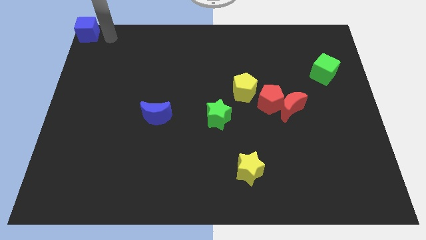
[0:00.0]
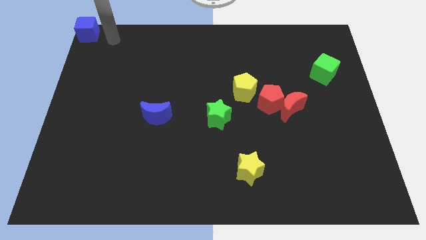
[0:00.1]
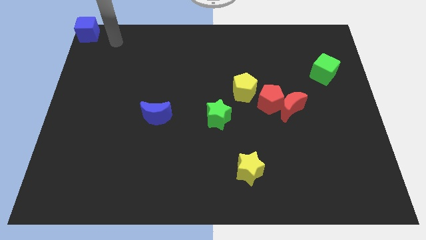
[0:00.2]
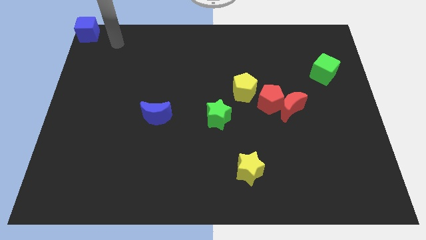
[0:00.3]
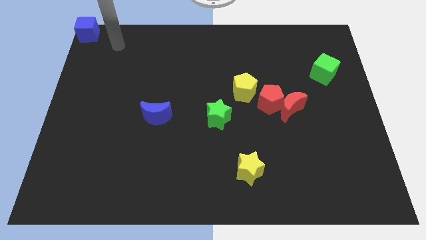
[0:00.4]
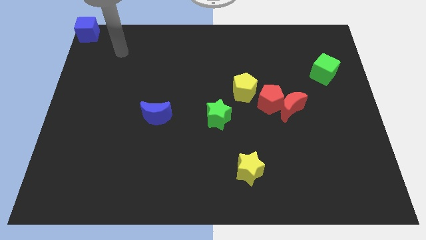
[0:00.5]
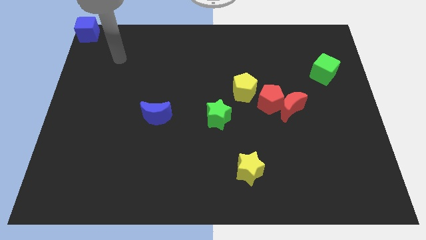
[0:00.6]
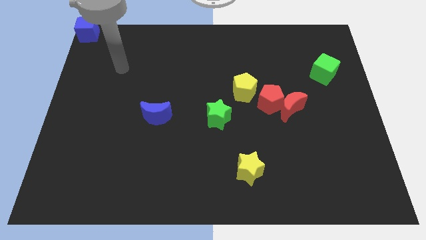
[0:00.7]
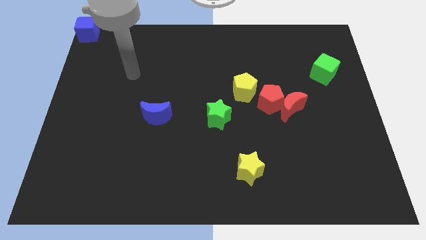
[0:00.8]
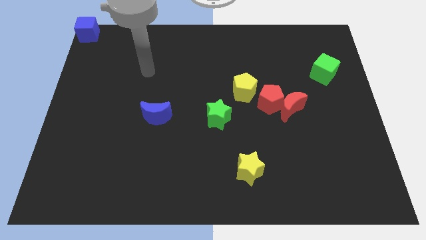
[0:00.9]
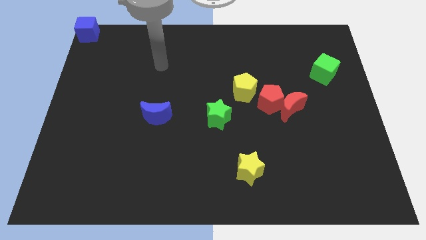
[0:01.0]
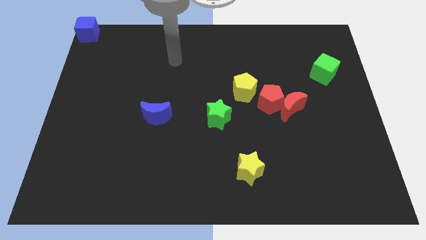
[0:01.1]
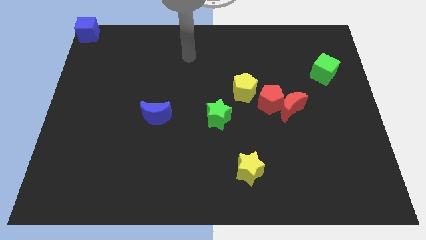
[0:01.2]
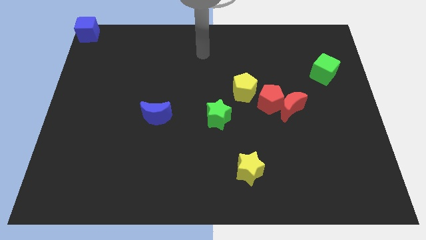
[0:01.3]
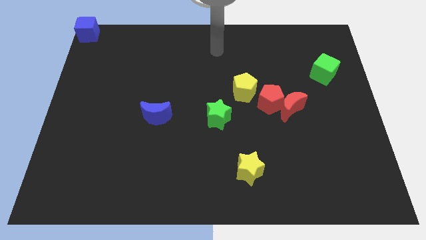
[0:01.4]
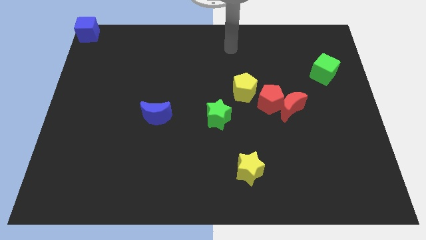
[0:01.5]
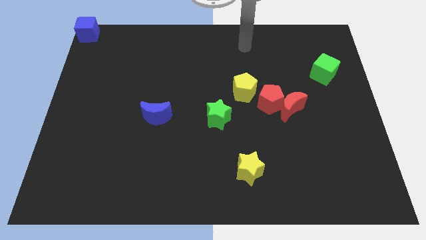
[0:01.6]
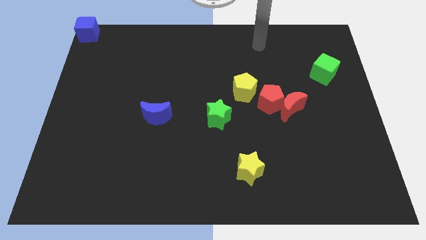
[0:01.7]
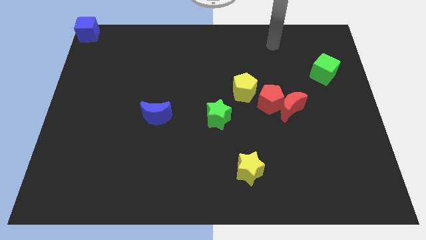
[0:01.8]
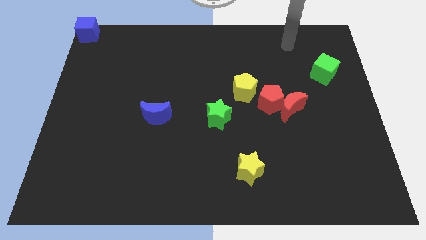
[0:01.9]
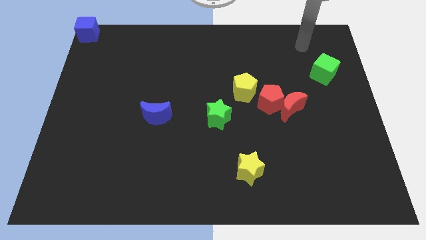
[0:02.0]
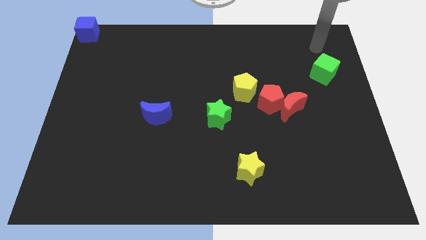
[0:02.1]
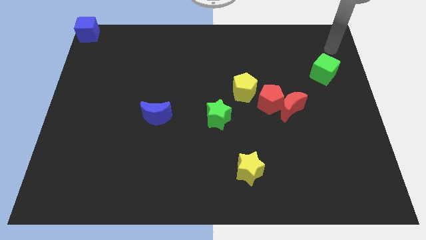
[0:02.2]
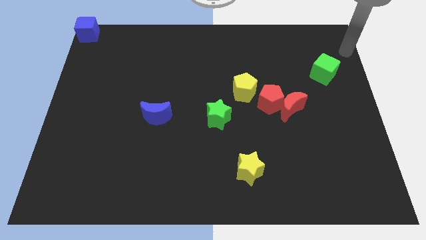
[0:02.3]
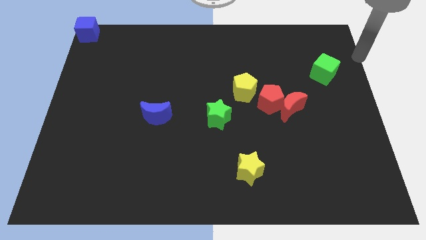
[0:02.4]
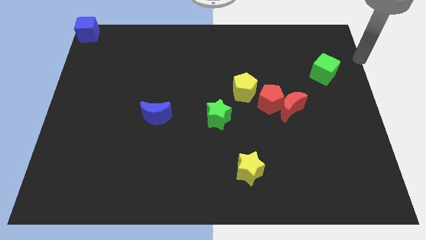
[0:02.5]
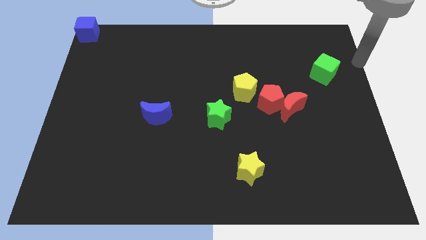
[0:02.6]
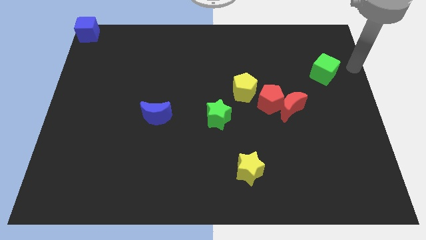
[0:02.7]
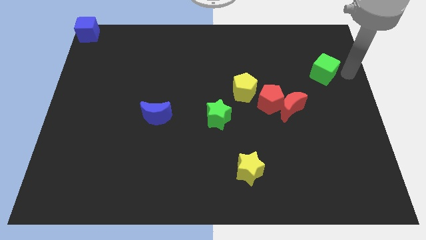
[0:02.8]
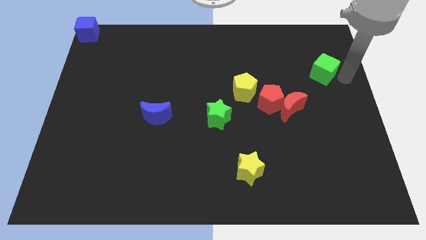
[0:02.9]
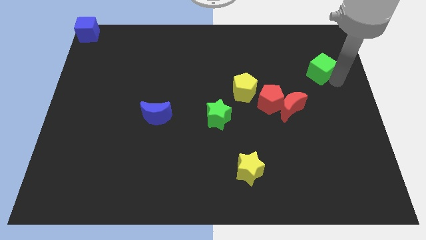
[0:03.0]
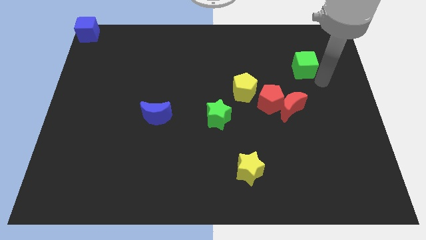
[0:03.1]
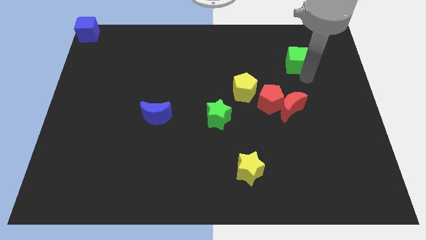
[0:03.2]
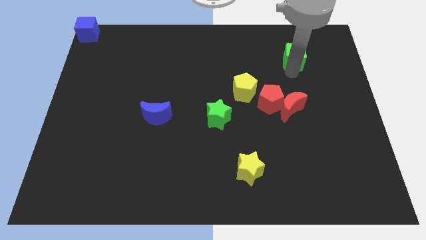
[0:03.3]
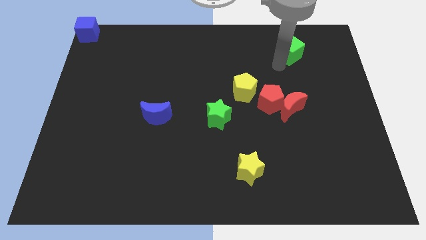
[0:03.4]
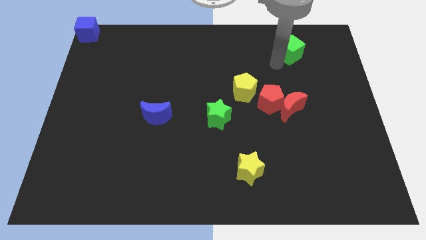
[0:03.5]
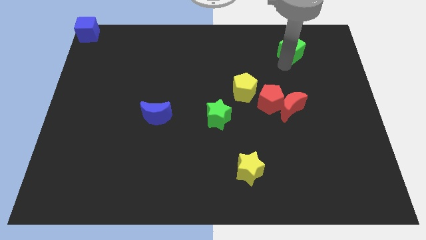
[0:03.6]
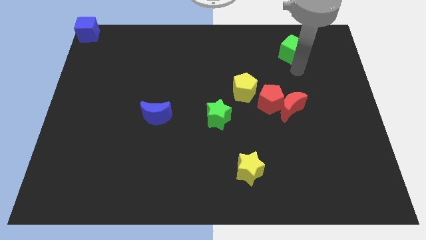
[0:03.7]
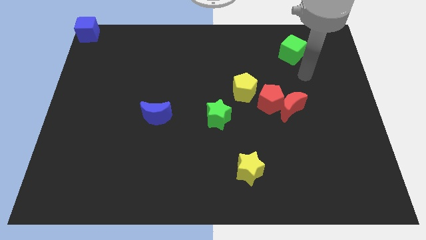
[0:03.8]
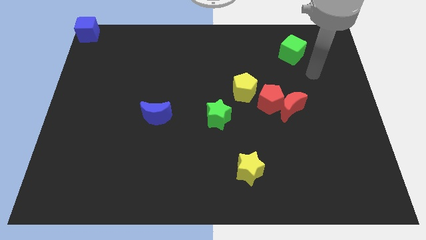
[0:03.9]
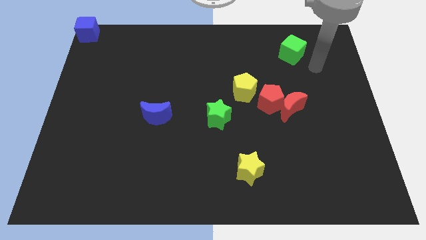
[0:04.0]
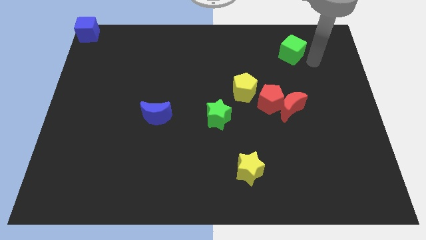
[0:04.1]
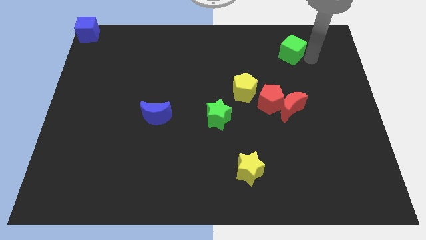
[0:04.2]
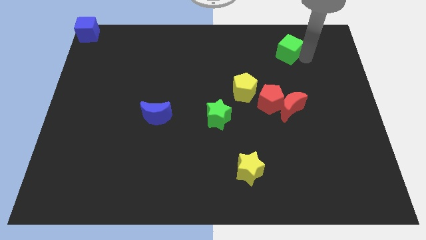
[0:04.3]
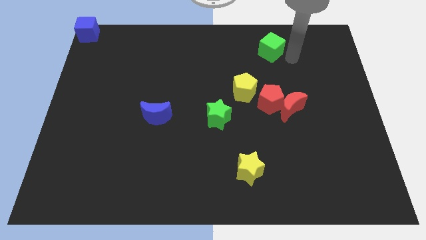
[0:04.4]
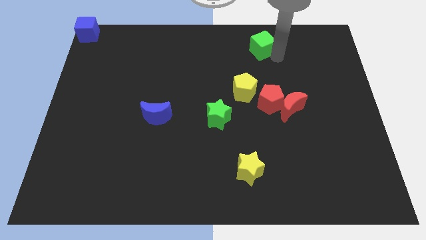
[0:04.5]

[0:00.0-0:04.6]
place the green cube above the yellow pentagon

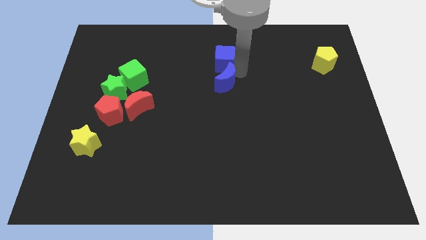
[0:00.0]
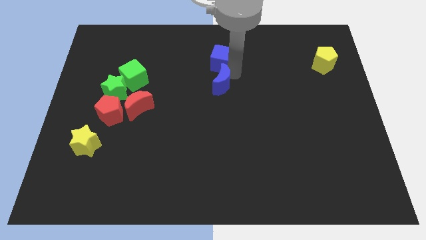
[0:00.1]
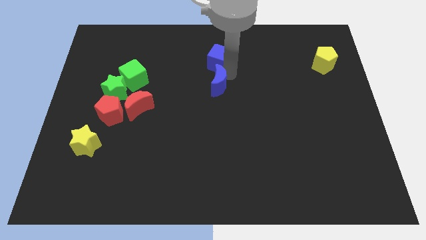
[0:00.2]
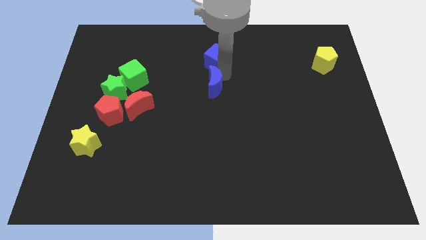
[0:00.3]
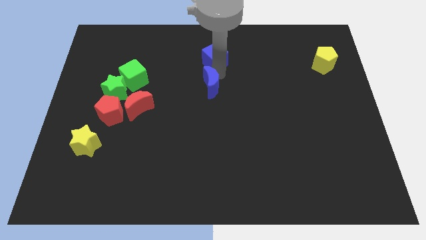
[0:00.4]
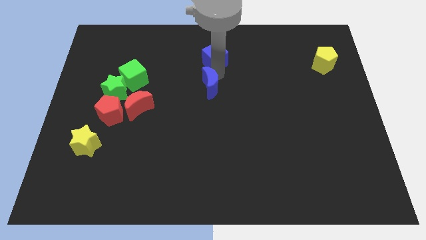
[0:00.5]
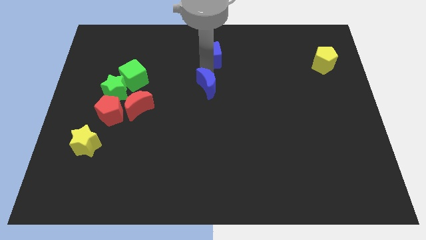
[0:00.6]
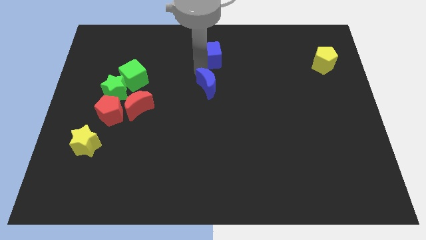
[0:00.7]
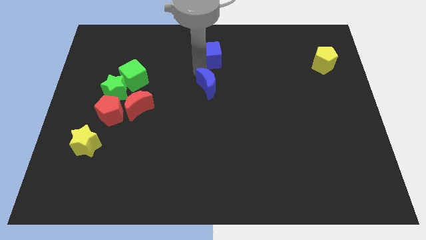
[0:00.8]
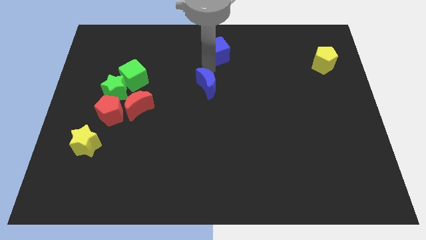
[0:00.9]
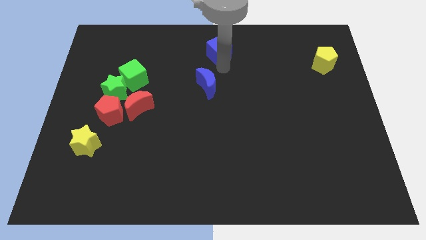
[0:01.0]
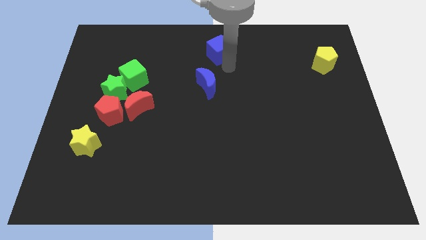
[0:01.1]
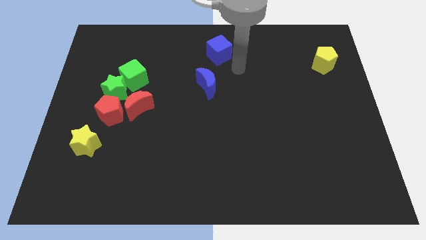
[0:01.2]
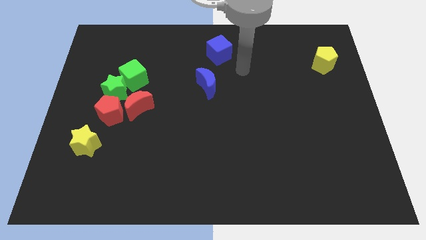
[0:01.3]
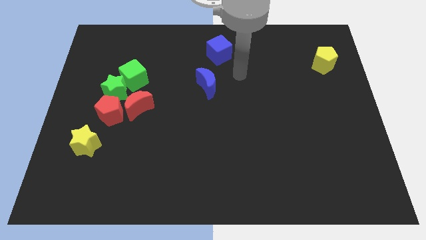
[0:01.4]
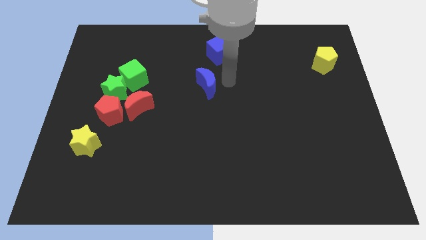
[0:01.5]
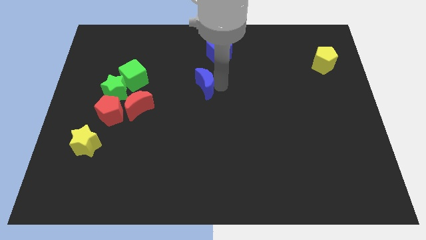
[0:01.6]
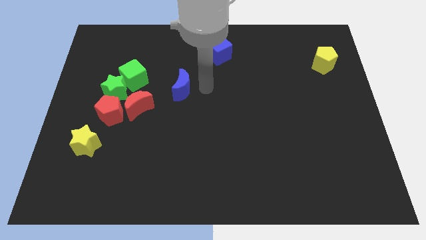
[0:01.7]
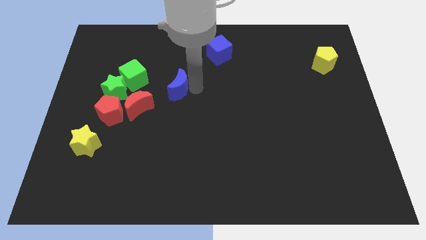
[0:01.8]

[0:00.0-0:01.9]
separate blue moon and the blue cube

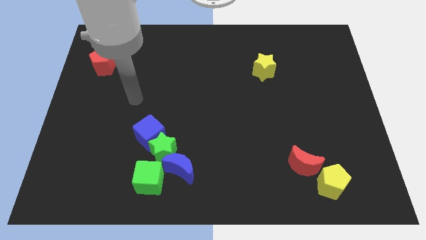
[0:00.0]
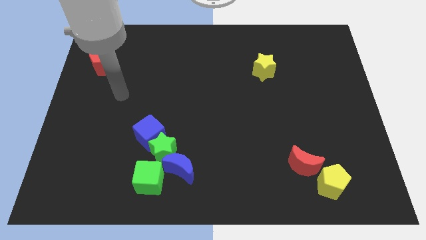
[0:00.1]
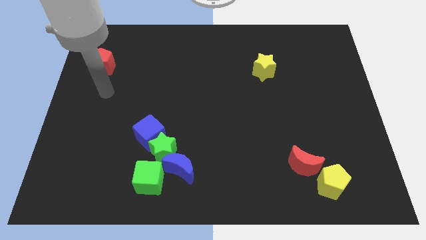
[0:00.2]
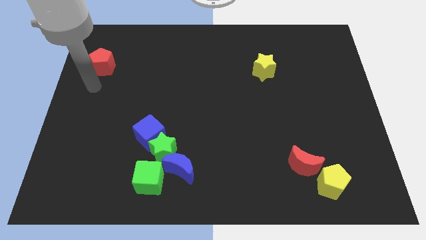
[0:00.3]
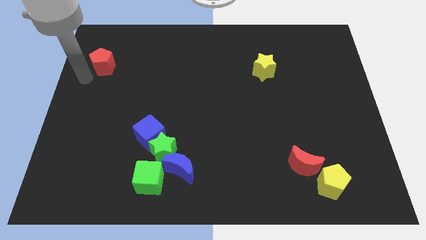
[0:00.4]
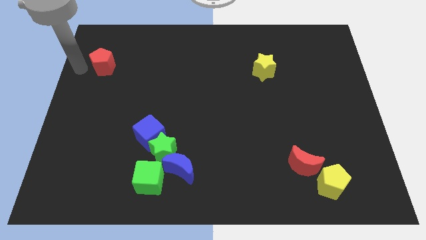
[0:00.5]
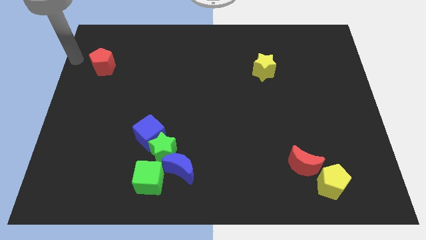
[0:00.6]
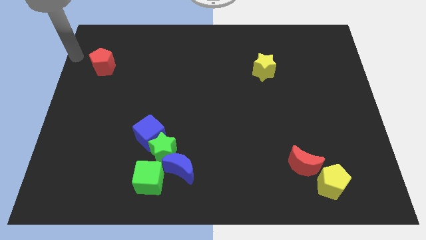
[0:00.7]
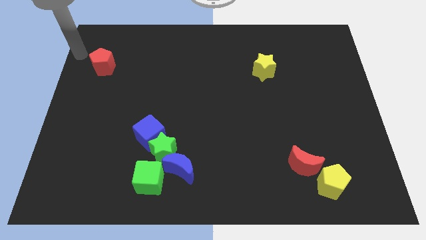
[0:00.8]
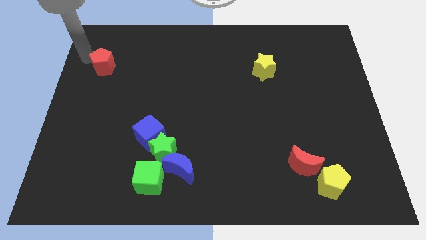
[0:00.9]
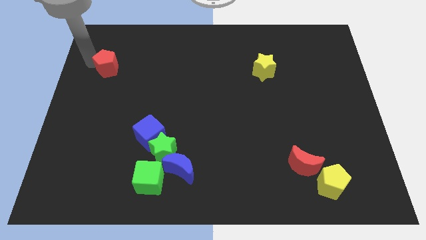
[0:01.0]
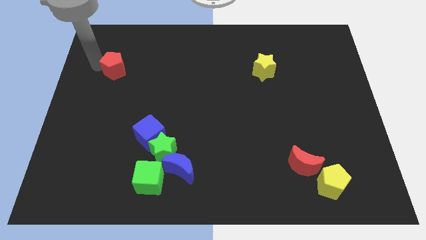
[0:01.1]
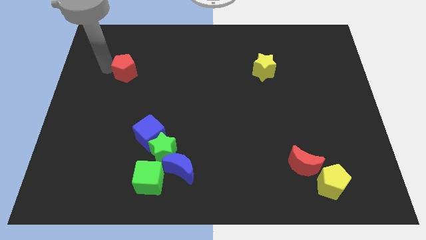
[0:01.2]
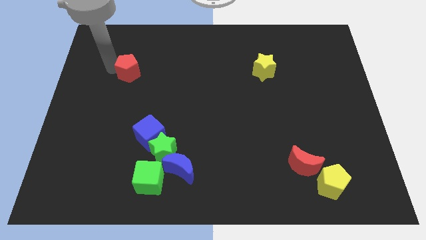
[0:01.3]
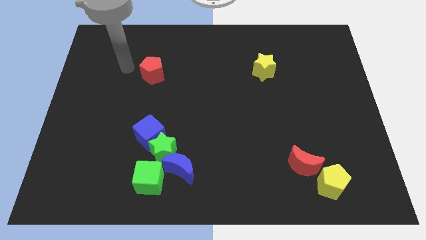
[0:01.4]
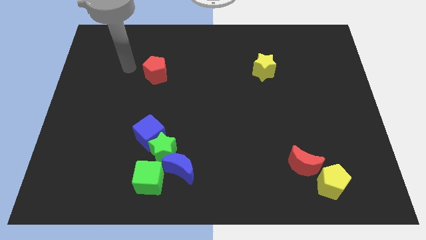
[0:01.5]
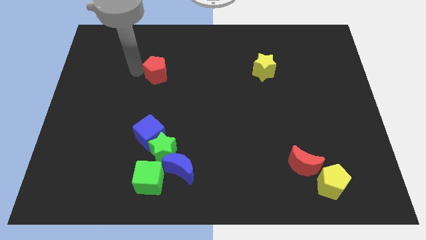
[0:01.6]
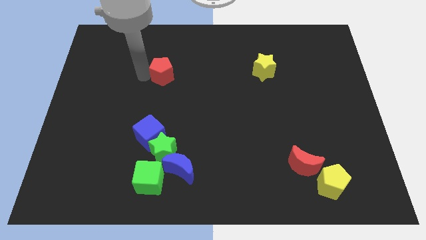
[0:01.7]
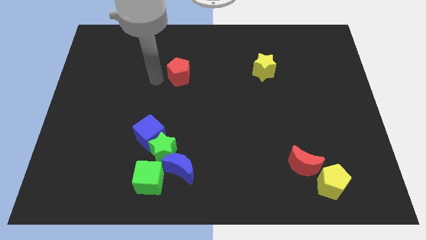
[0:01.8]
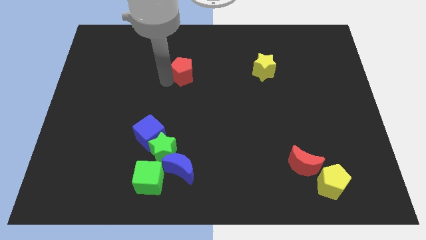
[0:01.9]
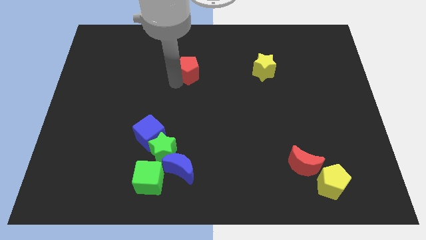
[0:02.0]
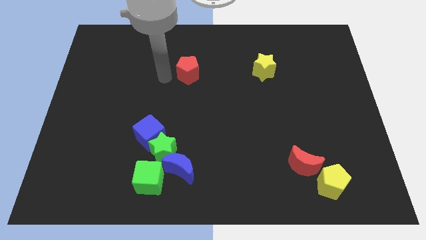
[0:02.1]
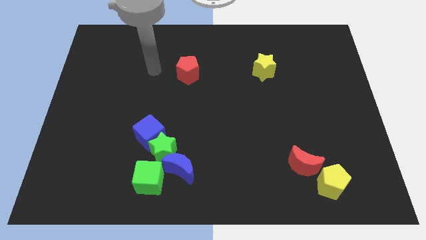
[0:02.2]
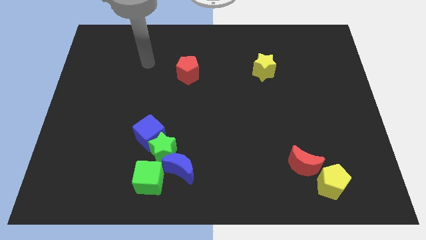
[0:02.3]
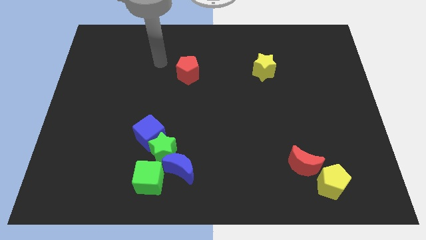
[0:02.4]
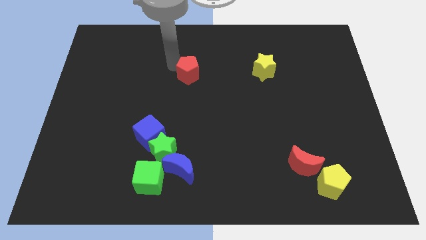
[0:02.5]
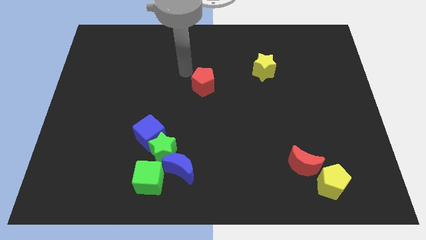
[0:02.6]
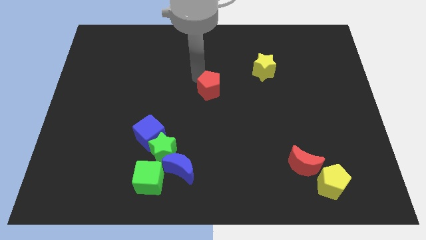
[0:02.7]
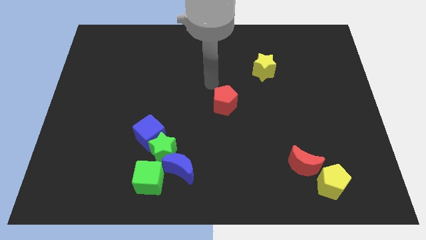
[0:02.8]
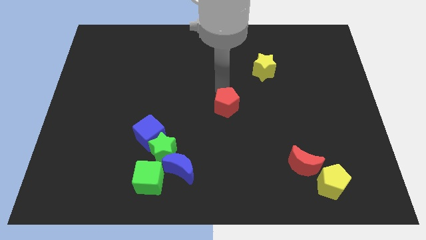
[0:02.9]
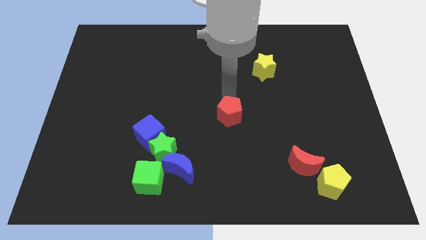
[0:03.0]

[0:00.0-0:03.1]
place the red pentagon to the center of the board
